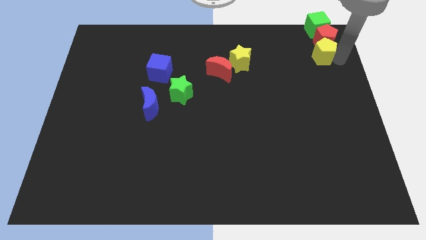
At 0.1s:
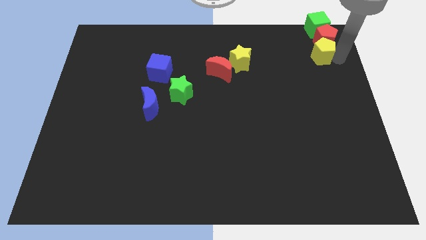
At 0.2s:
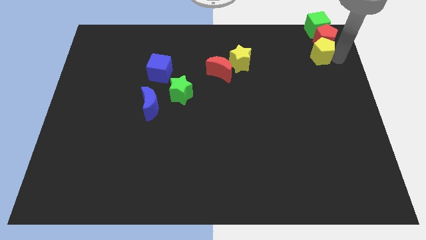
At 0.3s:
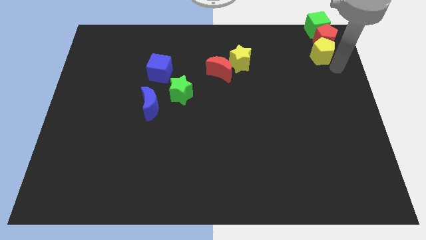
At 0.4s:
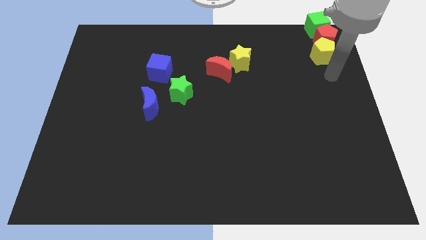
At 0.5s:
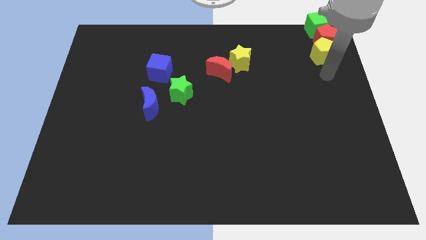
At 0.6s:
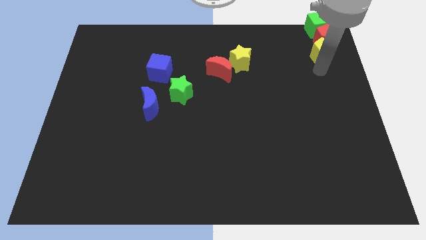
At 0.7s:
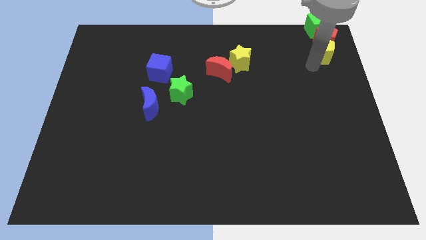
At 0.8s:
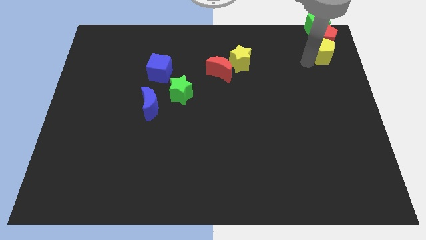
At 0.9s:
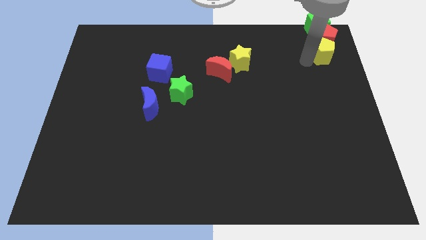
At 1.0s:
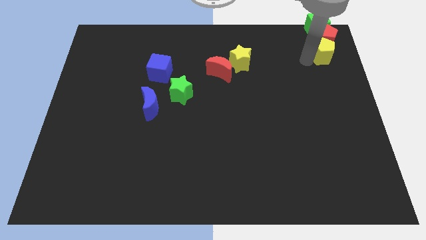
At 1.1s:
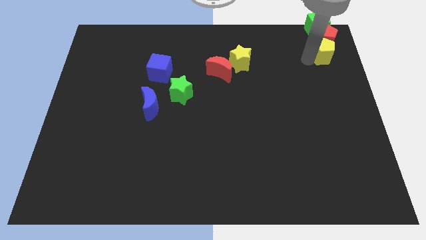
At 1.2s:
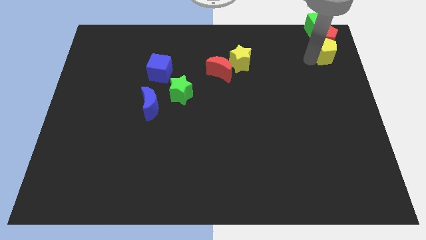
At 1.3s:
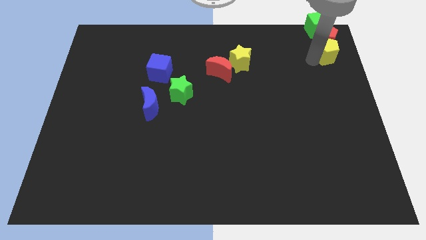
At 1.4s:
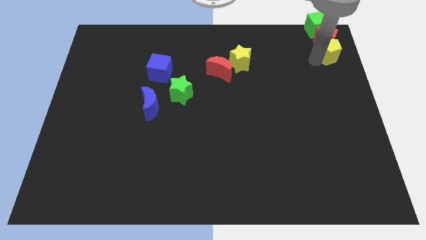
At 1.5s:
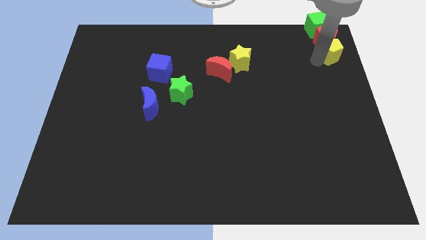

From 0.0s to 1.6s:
adjust yellow pentagon below red pentagon

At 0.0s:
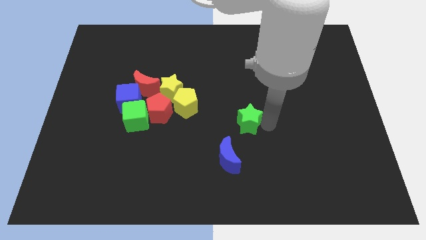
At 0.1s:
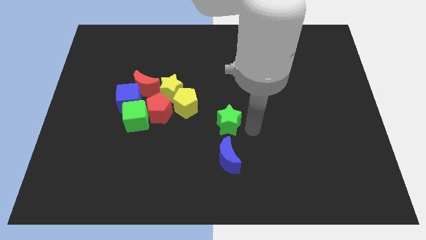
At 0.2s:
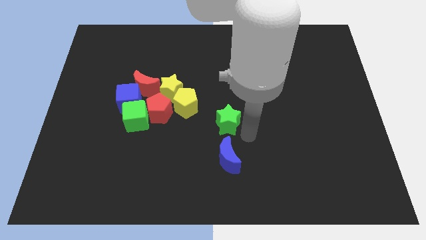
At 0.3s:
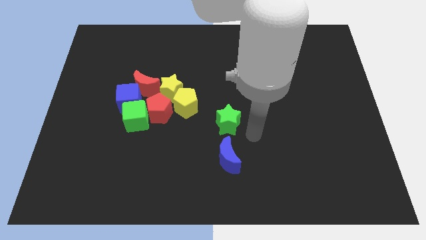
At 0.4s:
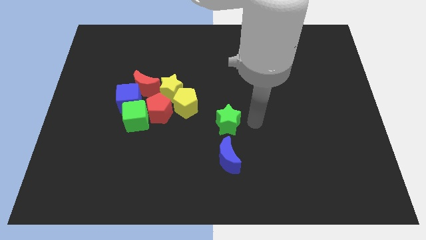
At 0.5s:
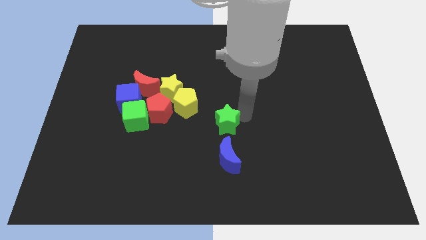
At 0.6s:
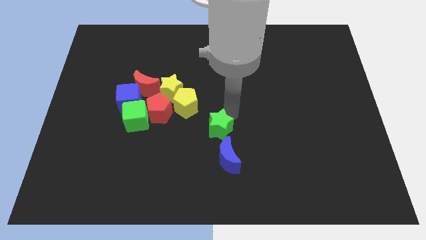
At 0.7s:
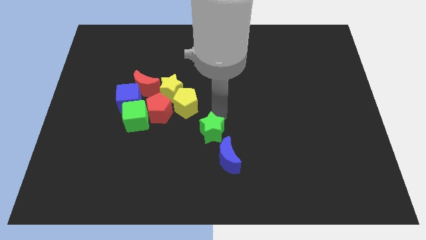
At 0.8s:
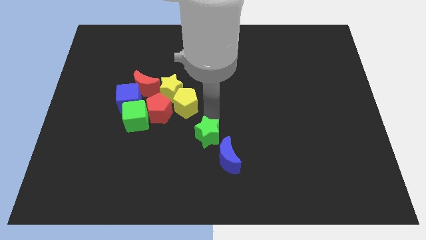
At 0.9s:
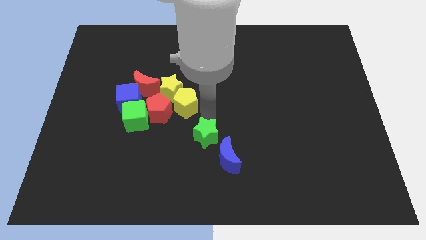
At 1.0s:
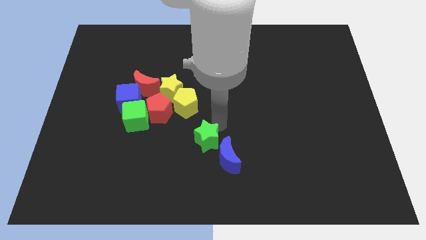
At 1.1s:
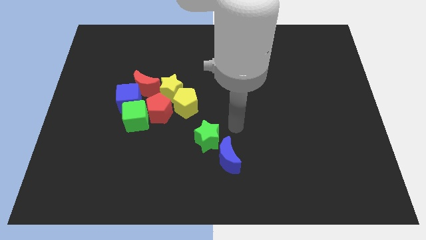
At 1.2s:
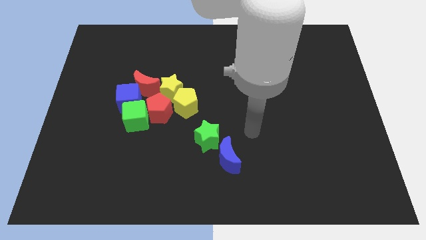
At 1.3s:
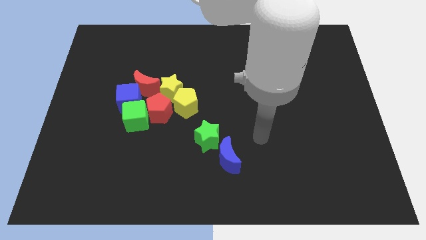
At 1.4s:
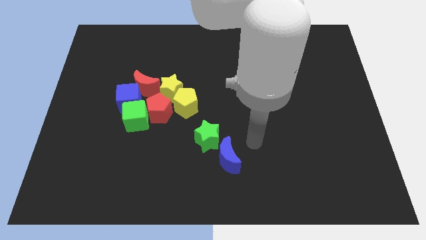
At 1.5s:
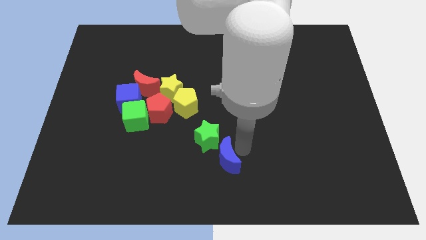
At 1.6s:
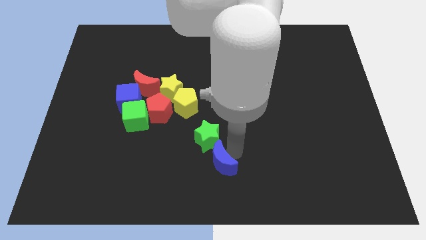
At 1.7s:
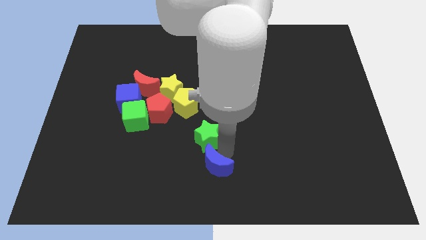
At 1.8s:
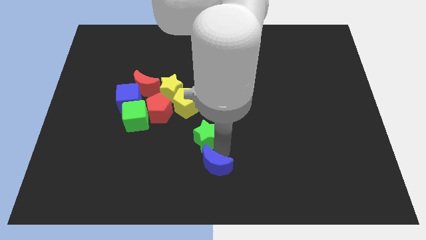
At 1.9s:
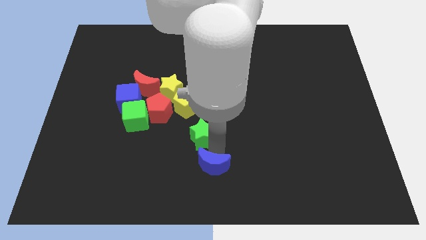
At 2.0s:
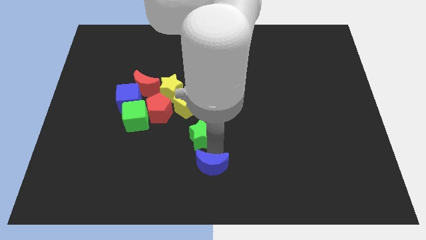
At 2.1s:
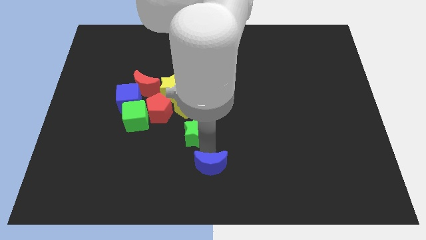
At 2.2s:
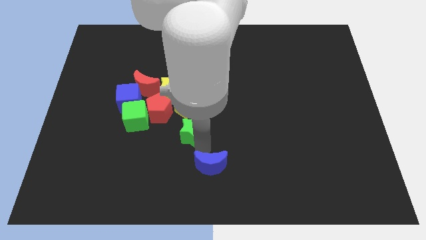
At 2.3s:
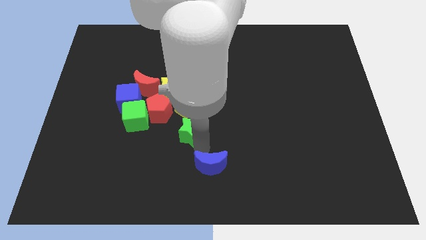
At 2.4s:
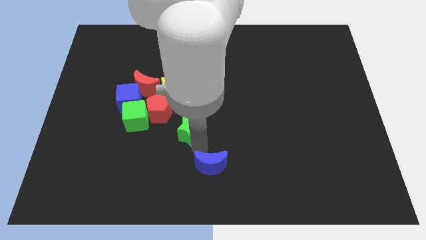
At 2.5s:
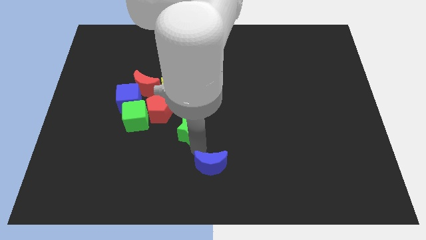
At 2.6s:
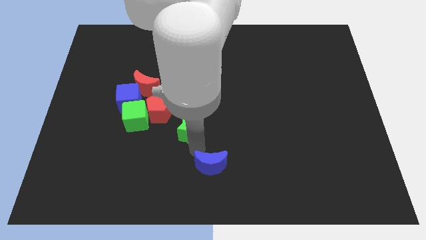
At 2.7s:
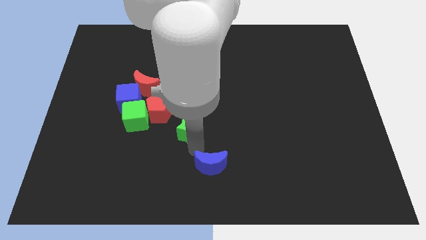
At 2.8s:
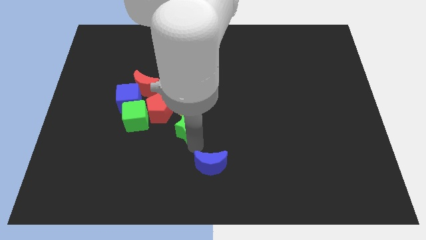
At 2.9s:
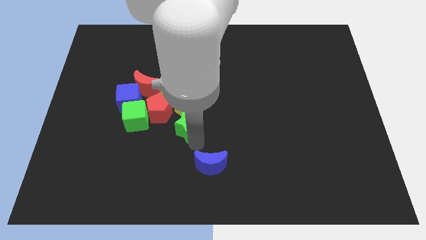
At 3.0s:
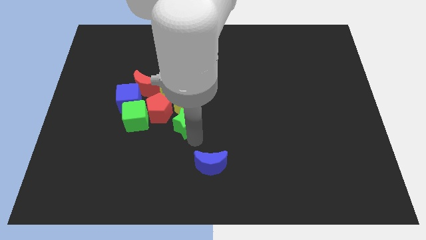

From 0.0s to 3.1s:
move the green star at the bottom of the yellow pentagon

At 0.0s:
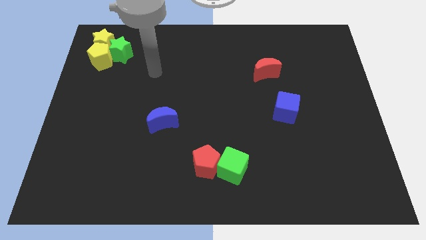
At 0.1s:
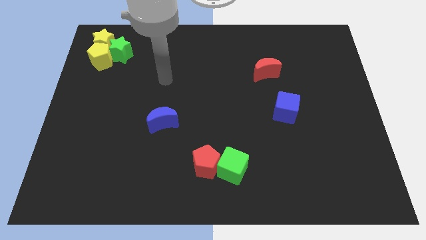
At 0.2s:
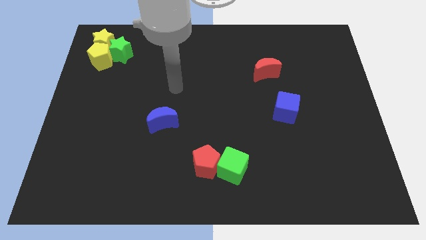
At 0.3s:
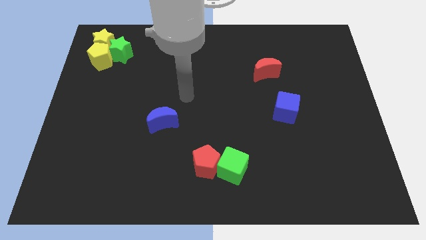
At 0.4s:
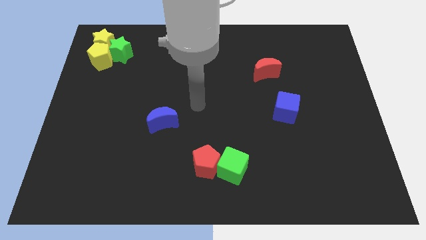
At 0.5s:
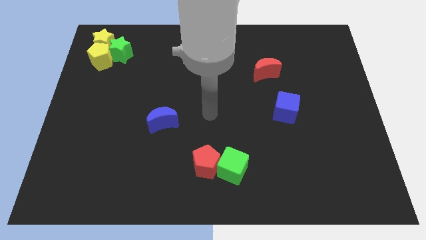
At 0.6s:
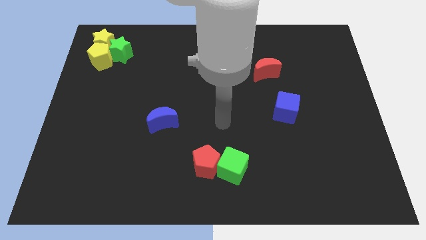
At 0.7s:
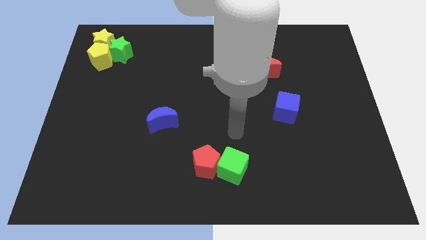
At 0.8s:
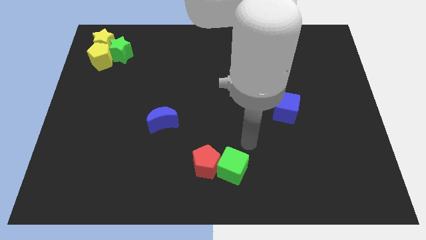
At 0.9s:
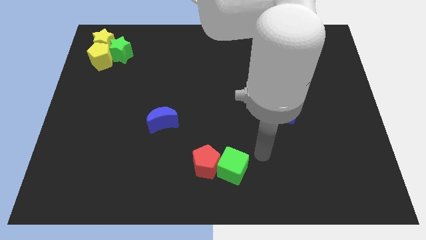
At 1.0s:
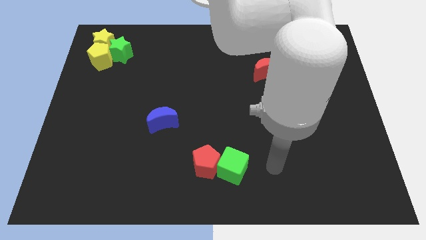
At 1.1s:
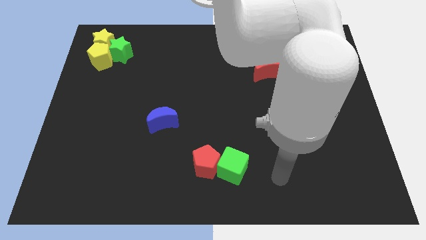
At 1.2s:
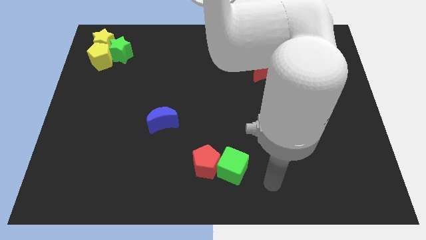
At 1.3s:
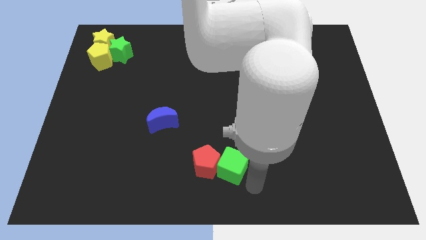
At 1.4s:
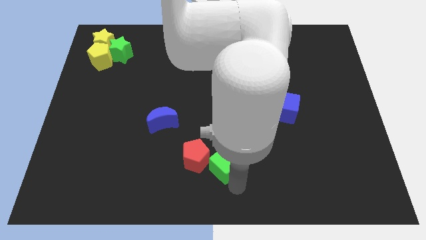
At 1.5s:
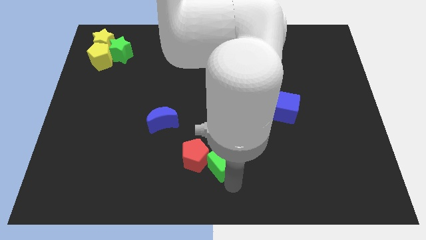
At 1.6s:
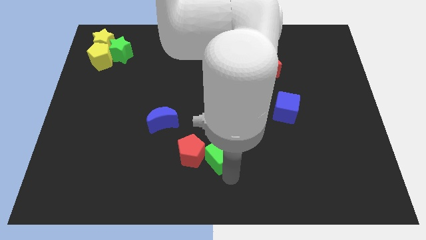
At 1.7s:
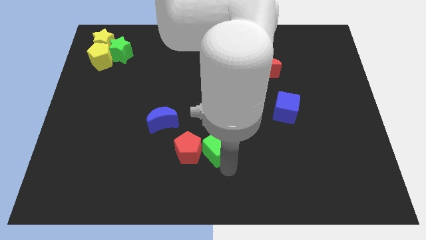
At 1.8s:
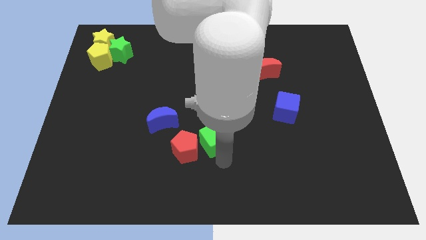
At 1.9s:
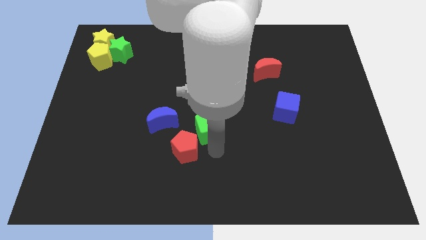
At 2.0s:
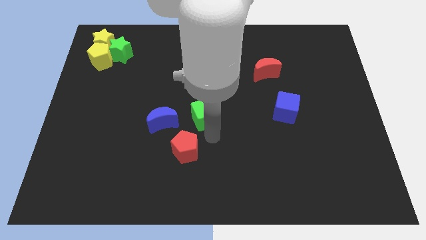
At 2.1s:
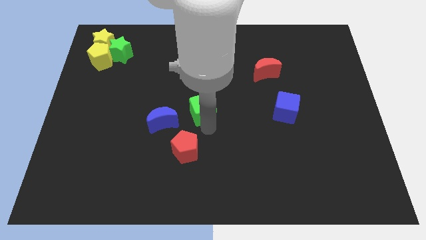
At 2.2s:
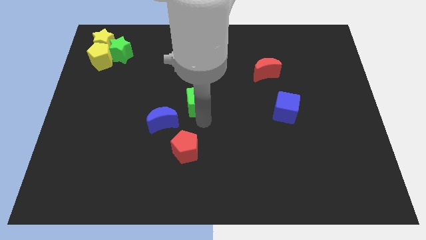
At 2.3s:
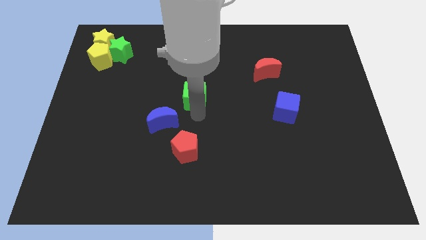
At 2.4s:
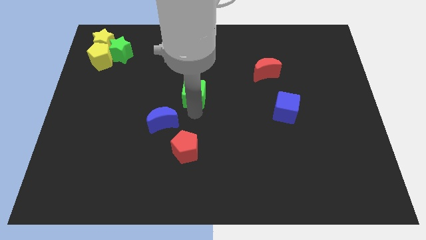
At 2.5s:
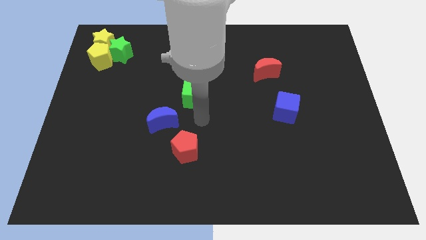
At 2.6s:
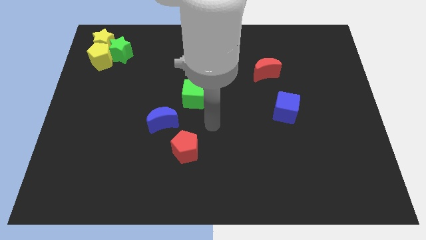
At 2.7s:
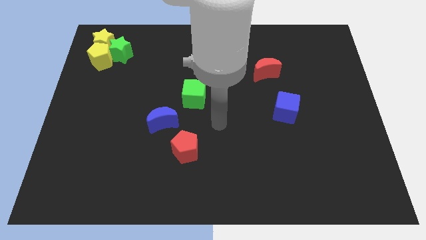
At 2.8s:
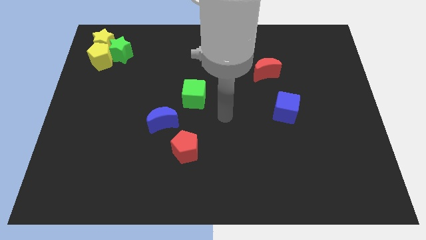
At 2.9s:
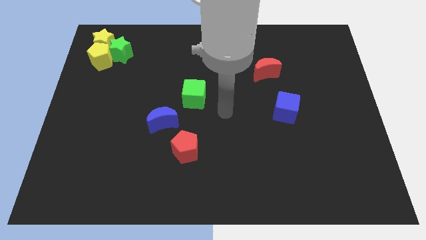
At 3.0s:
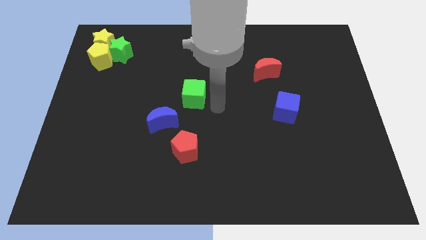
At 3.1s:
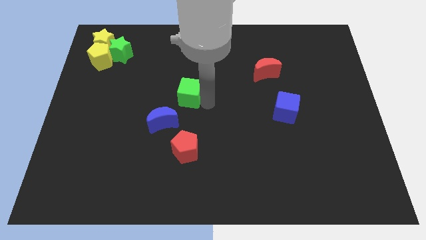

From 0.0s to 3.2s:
place the green cube at the center of the board

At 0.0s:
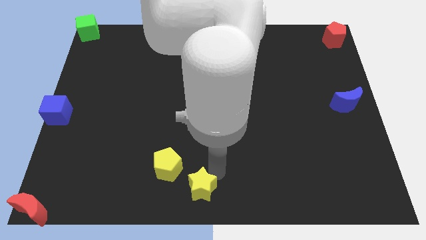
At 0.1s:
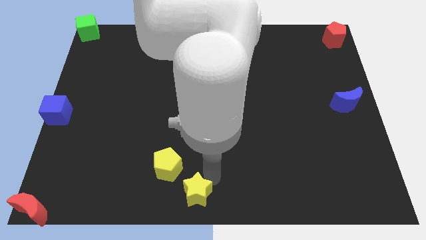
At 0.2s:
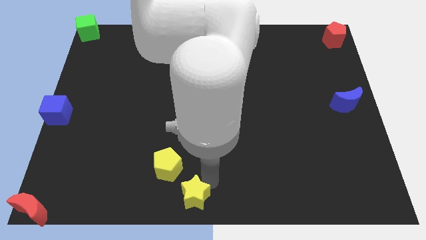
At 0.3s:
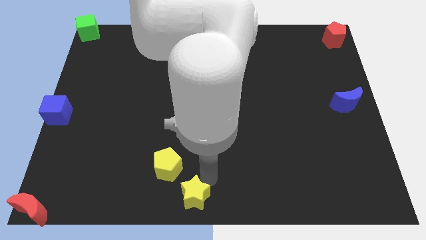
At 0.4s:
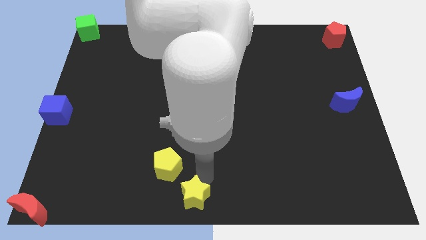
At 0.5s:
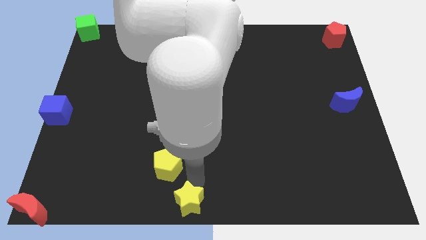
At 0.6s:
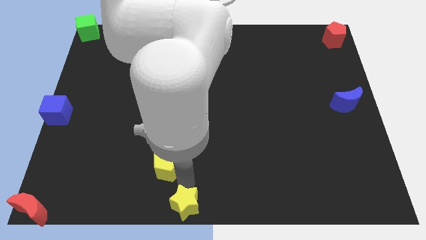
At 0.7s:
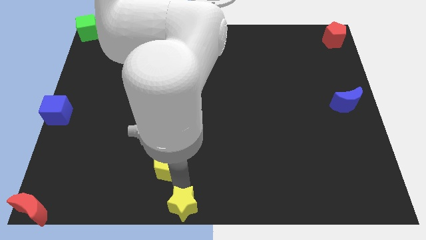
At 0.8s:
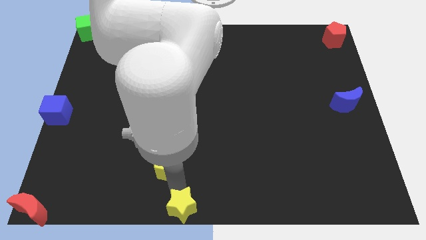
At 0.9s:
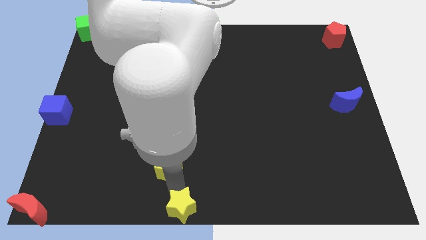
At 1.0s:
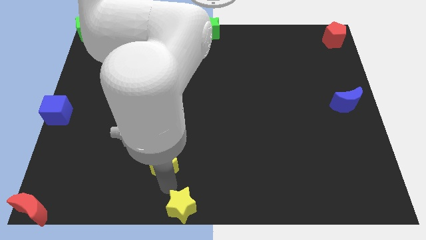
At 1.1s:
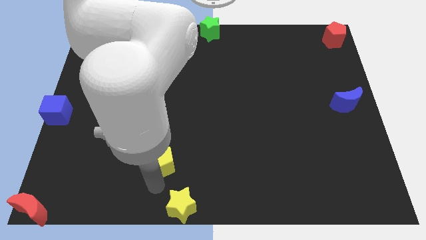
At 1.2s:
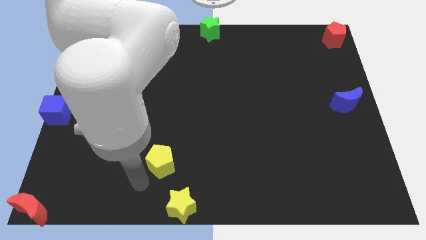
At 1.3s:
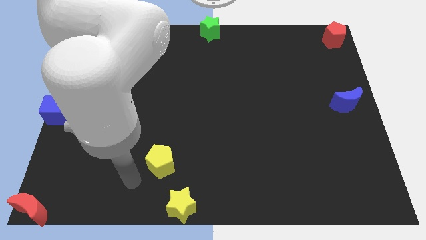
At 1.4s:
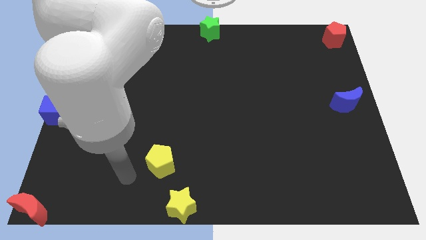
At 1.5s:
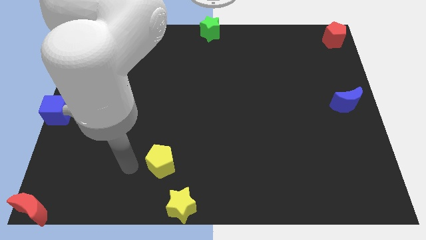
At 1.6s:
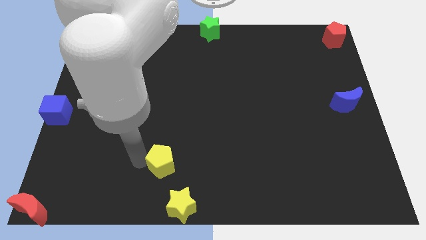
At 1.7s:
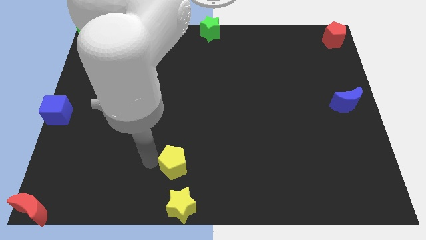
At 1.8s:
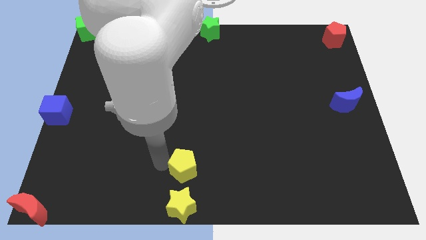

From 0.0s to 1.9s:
push yellow pentagon above yellow star
